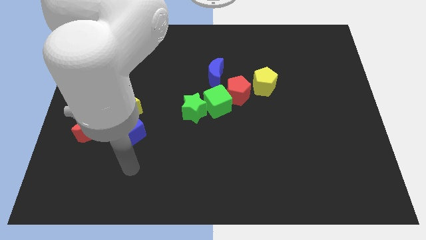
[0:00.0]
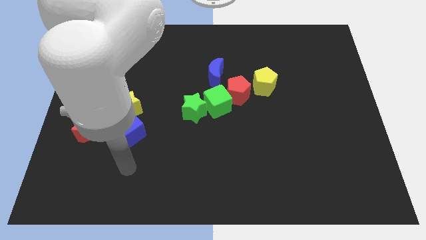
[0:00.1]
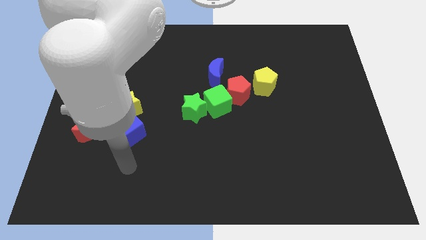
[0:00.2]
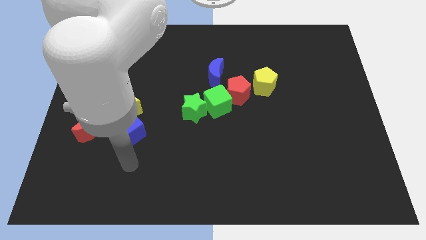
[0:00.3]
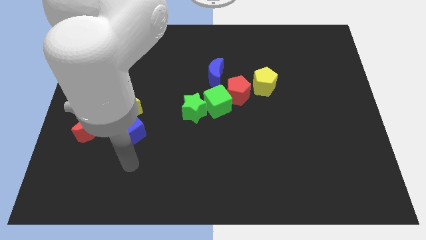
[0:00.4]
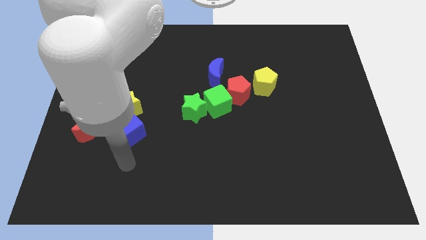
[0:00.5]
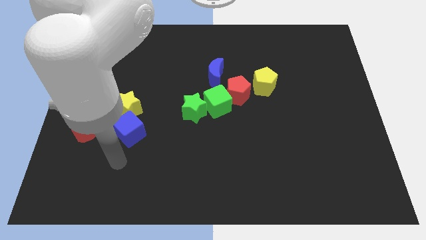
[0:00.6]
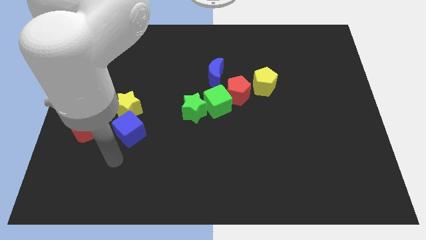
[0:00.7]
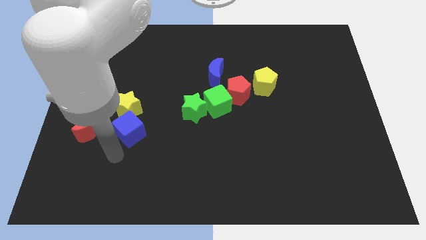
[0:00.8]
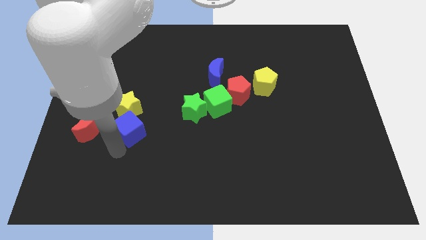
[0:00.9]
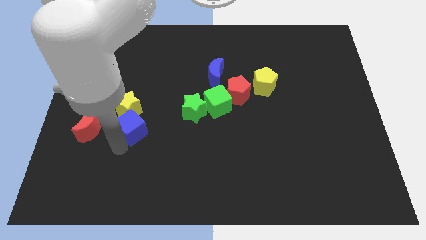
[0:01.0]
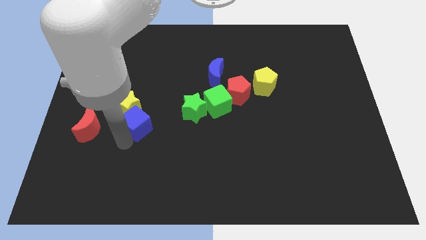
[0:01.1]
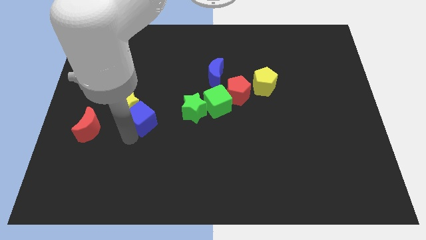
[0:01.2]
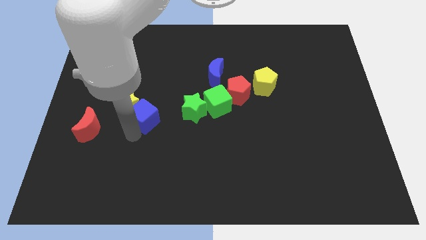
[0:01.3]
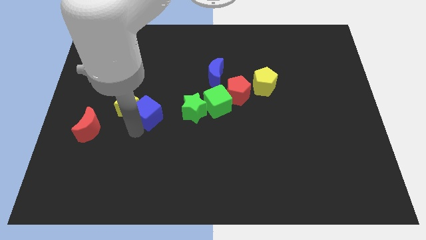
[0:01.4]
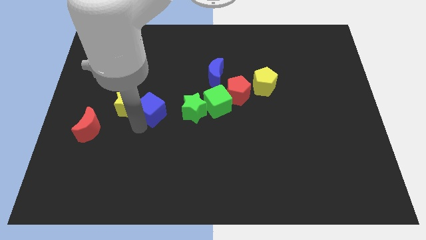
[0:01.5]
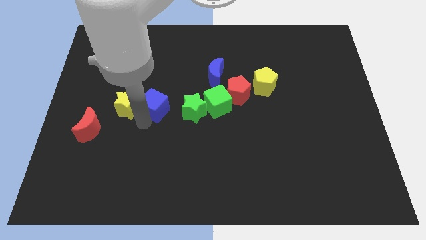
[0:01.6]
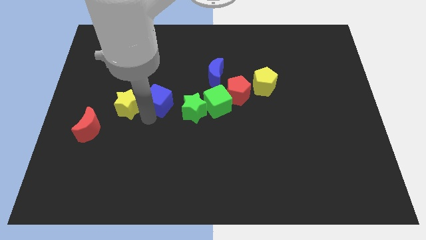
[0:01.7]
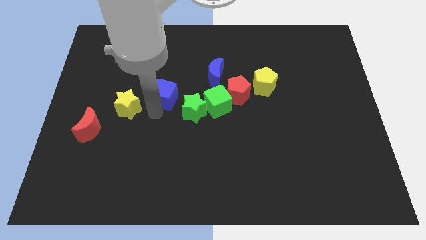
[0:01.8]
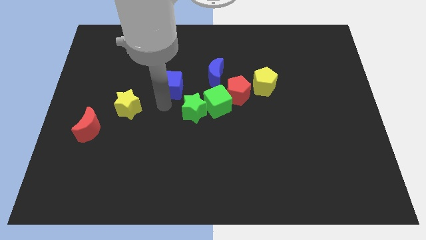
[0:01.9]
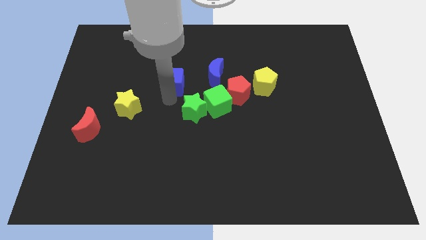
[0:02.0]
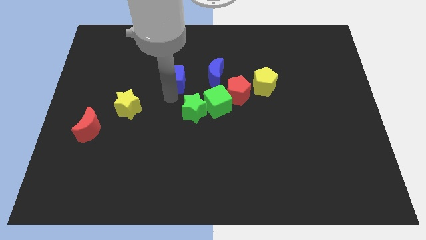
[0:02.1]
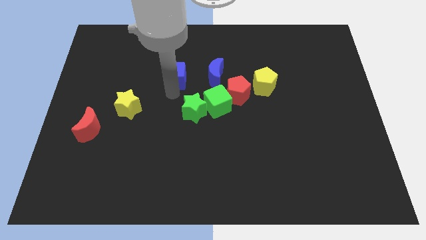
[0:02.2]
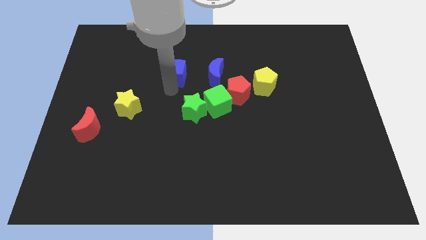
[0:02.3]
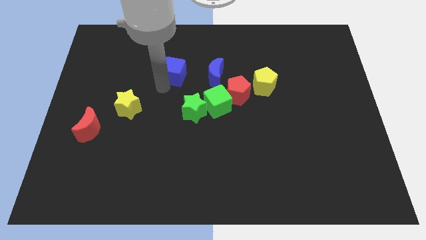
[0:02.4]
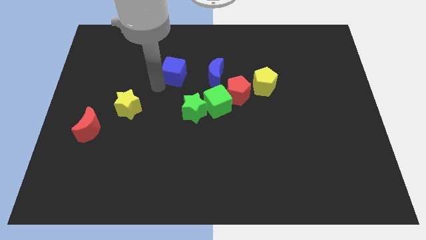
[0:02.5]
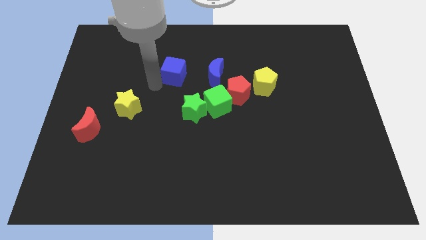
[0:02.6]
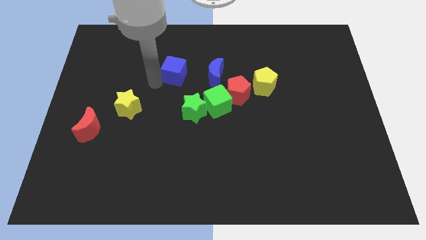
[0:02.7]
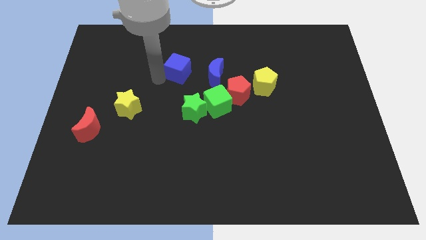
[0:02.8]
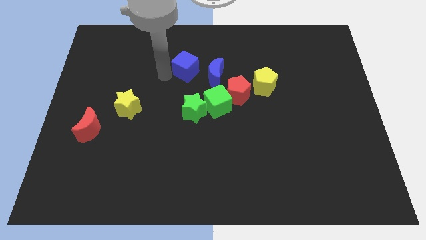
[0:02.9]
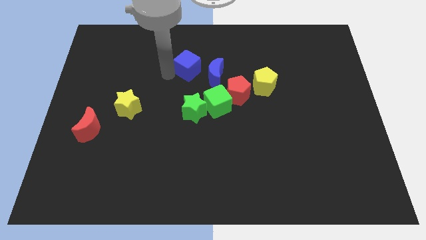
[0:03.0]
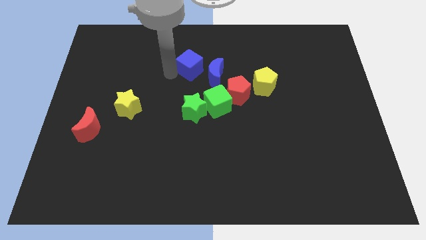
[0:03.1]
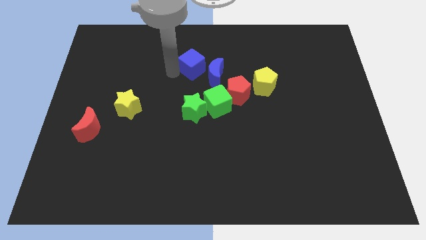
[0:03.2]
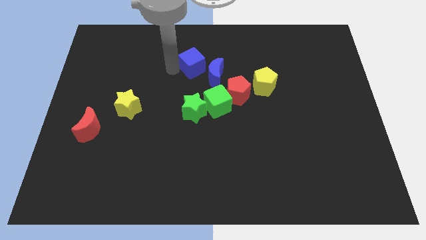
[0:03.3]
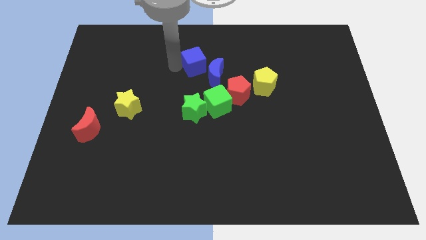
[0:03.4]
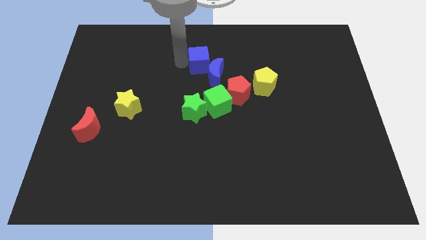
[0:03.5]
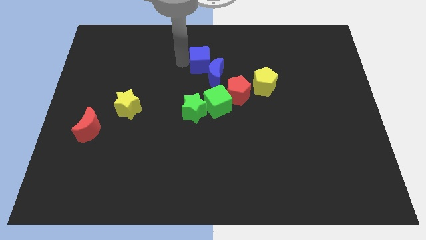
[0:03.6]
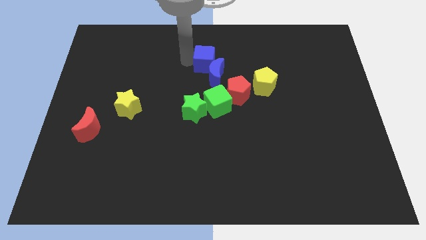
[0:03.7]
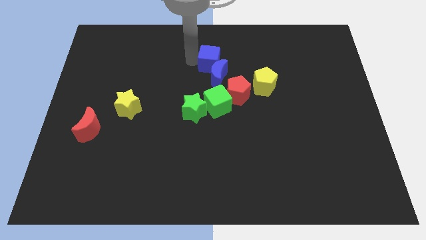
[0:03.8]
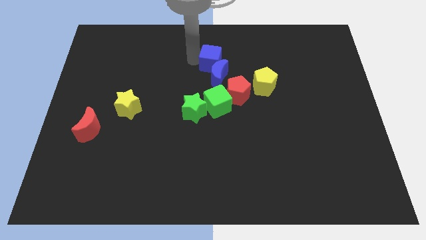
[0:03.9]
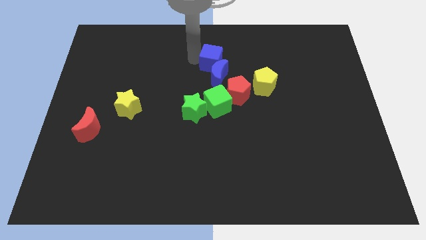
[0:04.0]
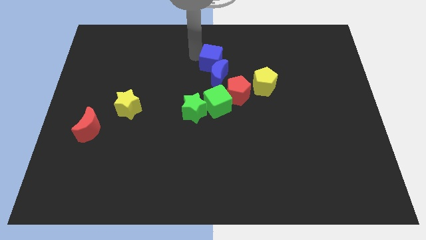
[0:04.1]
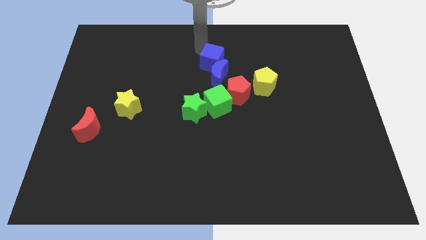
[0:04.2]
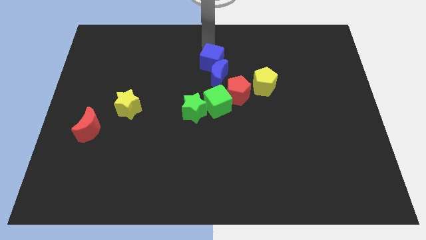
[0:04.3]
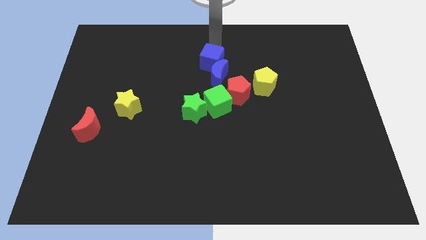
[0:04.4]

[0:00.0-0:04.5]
push the blue cube towards the blue moon

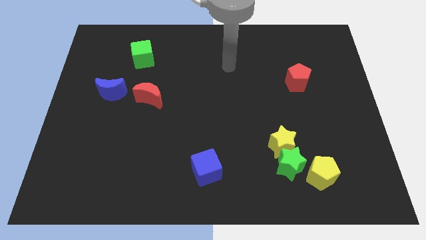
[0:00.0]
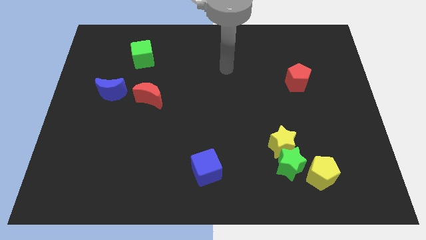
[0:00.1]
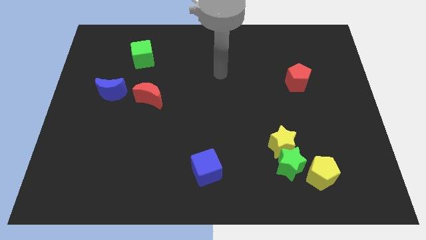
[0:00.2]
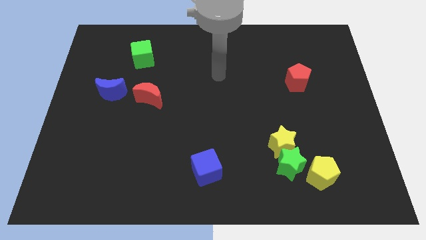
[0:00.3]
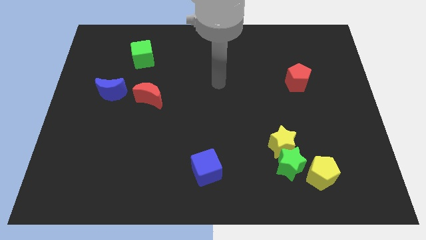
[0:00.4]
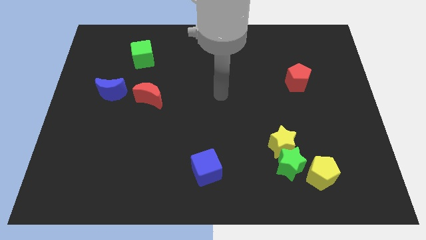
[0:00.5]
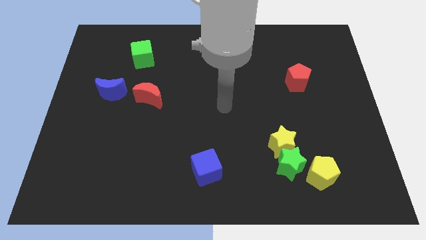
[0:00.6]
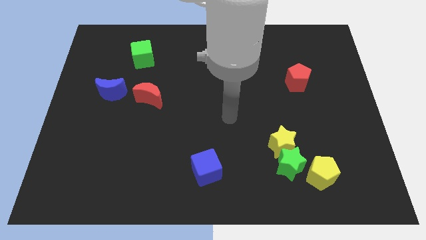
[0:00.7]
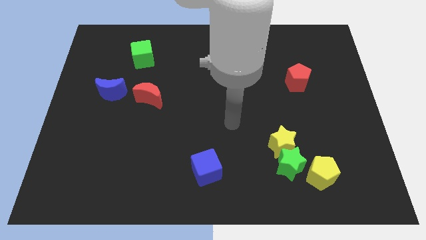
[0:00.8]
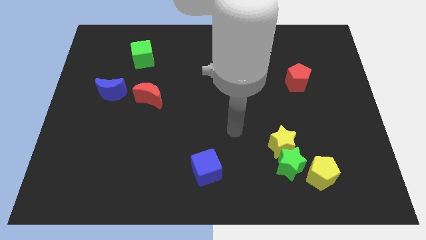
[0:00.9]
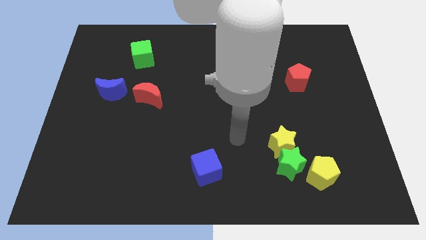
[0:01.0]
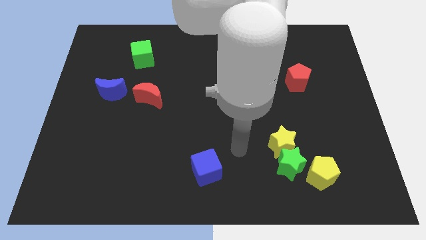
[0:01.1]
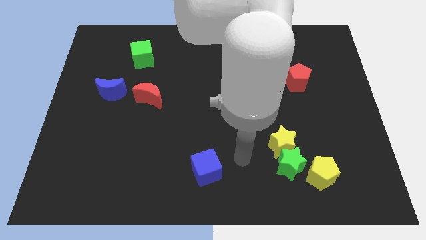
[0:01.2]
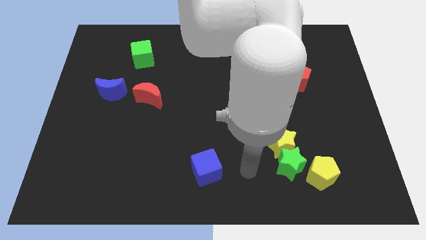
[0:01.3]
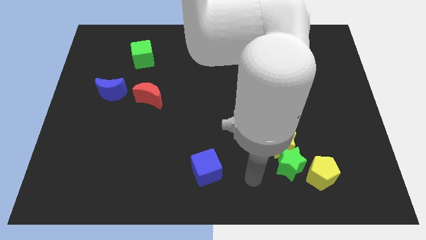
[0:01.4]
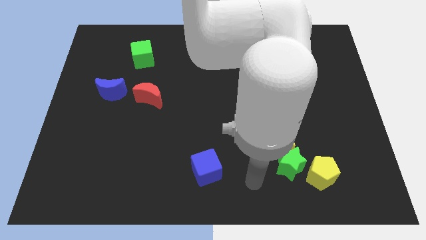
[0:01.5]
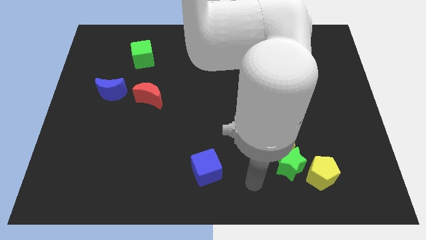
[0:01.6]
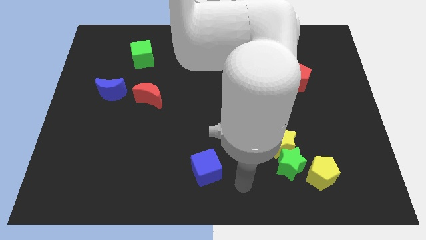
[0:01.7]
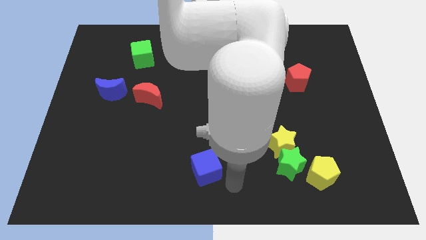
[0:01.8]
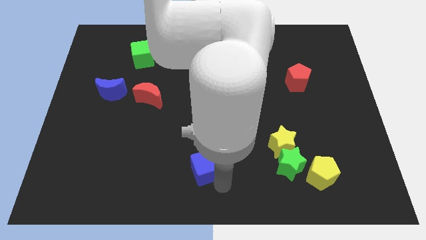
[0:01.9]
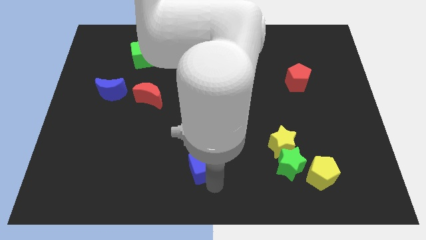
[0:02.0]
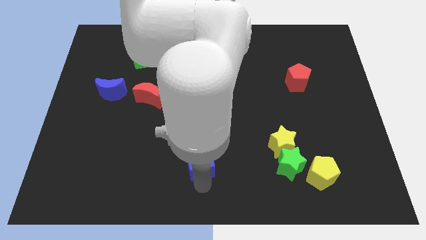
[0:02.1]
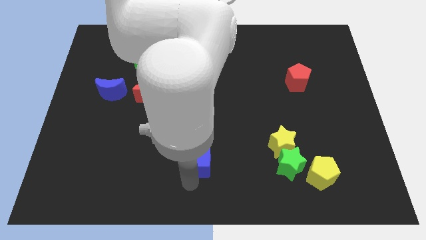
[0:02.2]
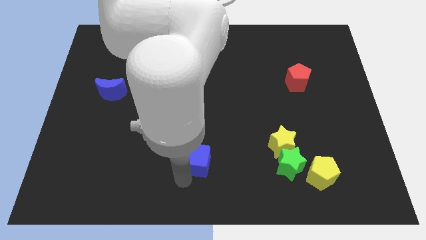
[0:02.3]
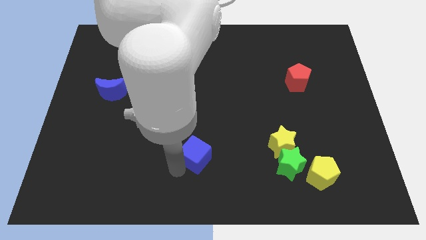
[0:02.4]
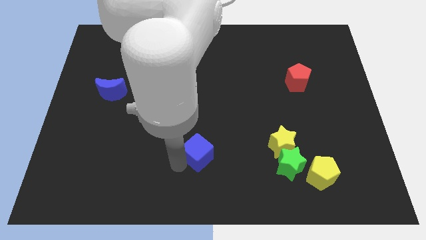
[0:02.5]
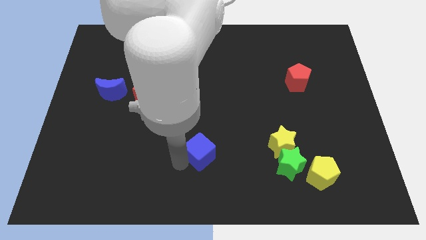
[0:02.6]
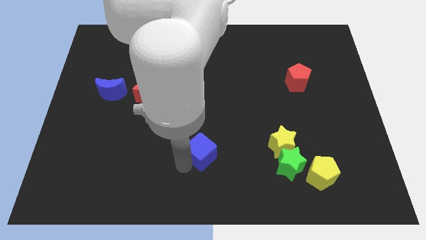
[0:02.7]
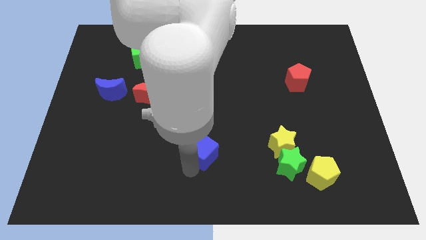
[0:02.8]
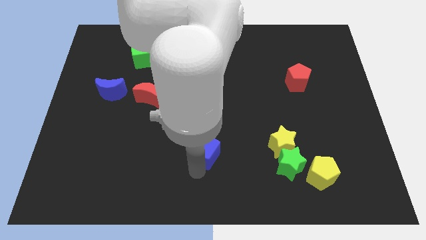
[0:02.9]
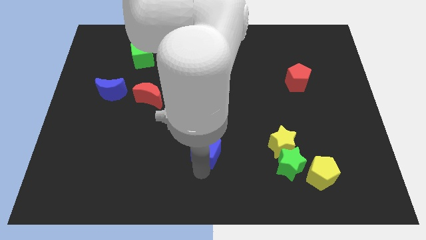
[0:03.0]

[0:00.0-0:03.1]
tap on the bottom side of blue cube

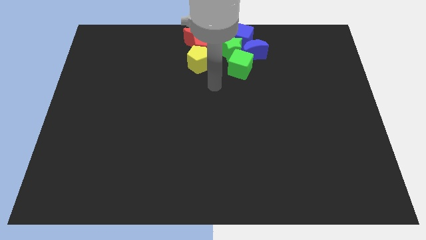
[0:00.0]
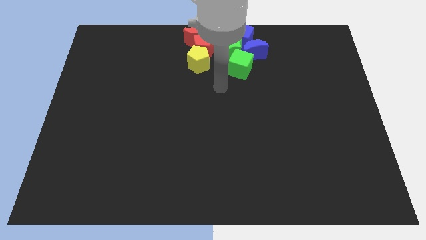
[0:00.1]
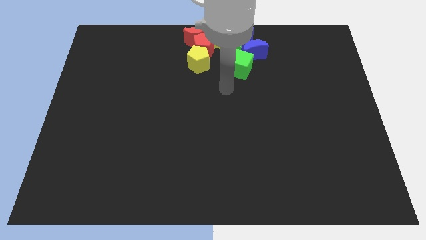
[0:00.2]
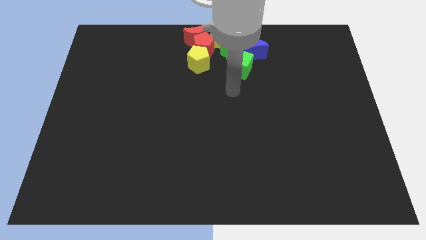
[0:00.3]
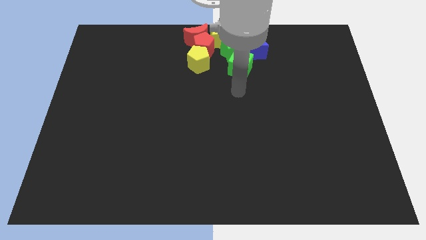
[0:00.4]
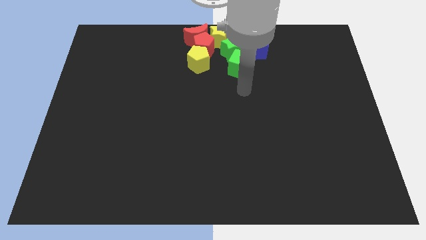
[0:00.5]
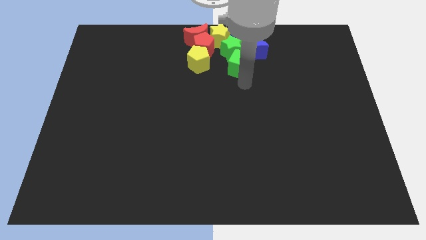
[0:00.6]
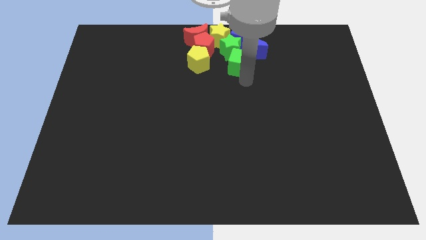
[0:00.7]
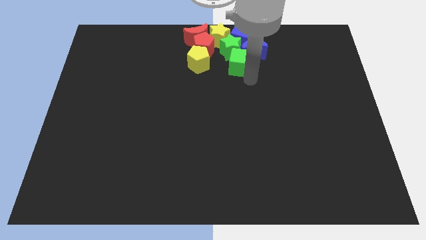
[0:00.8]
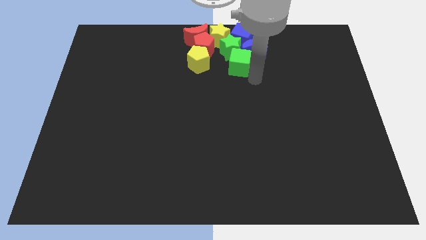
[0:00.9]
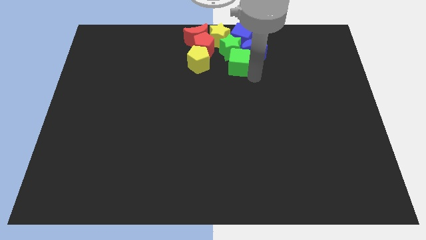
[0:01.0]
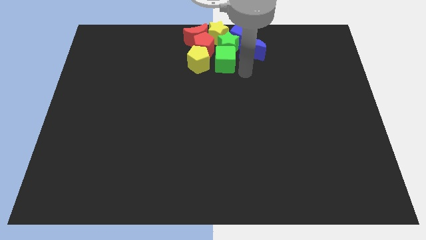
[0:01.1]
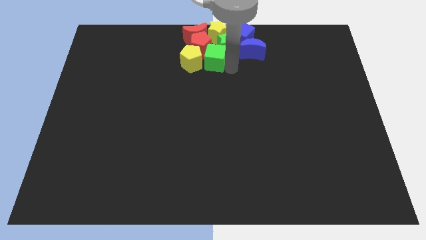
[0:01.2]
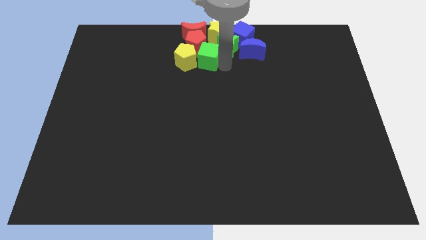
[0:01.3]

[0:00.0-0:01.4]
push the green cube into the yellow pentagon
